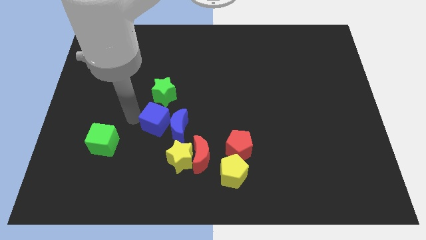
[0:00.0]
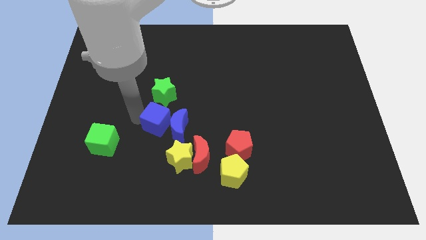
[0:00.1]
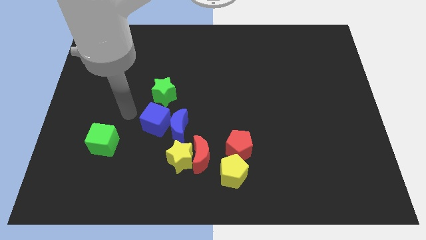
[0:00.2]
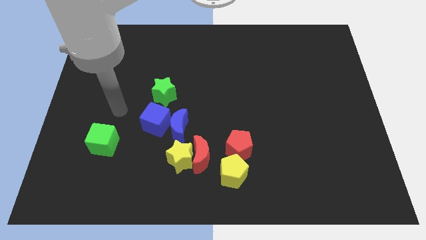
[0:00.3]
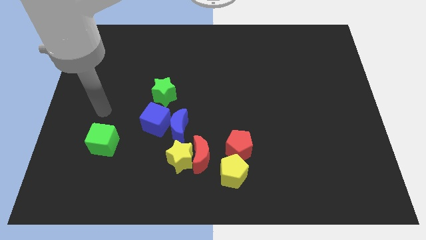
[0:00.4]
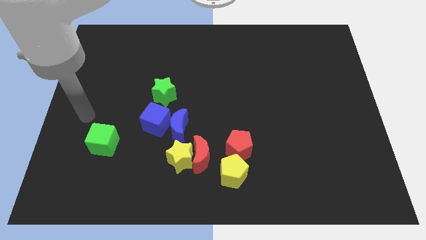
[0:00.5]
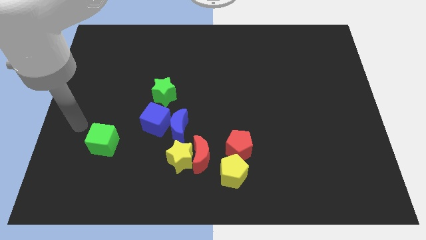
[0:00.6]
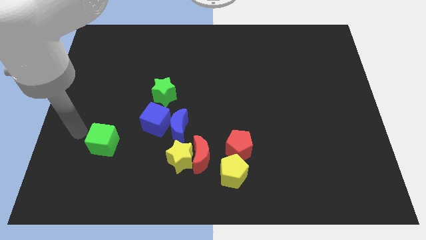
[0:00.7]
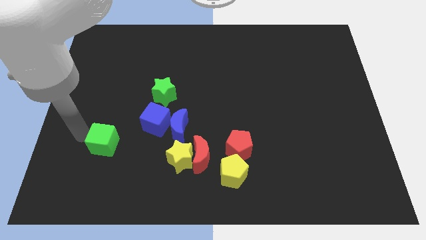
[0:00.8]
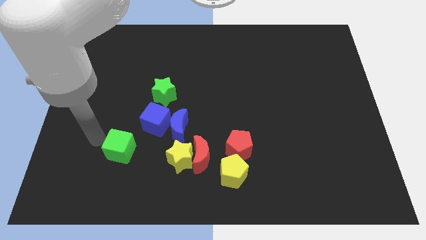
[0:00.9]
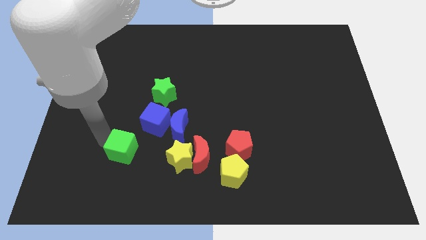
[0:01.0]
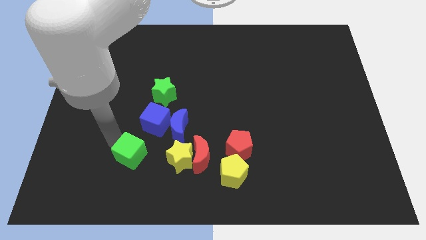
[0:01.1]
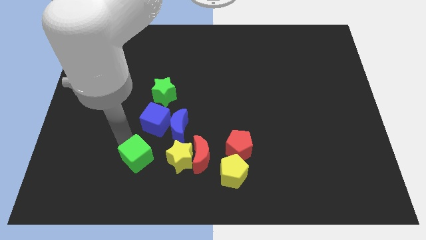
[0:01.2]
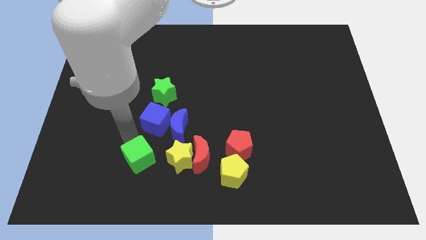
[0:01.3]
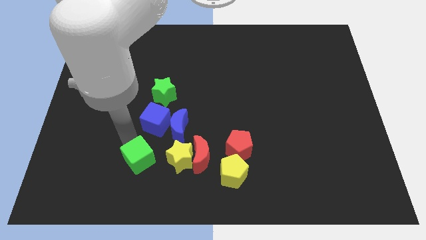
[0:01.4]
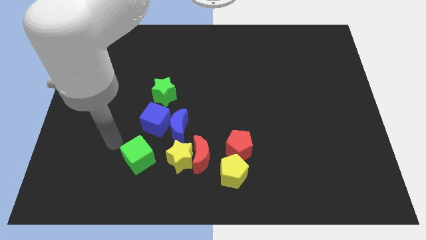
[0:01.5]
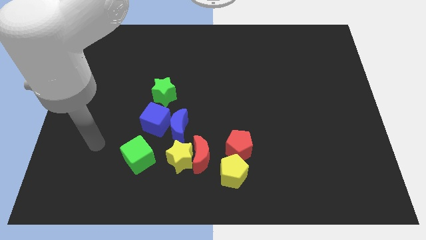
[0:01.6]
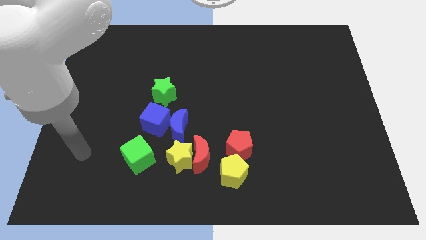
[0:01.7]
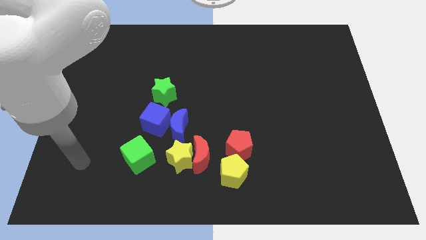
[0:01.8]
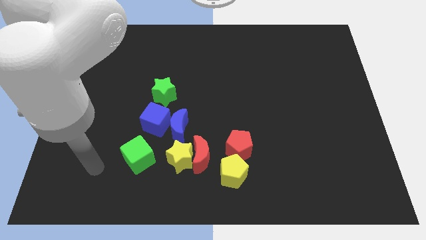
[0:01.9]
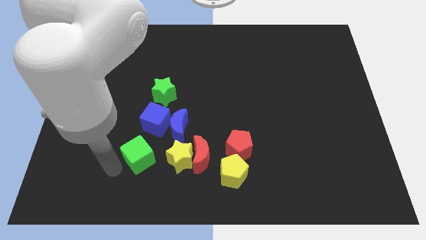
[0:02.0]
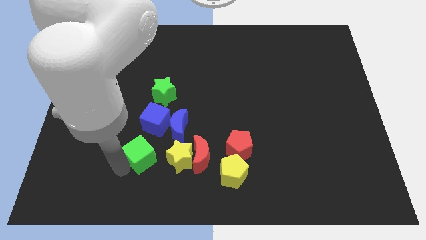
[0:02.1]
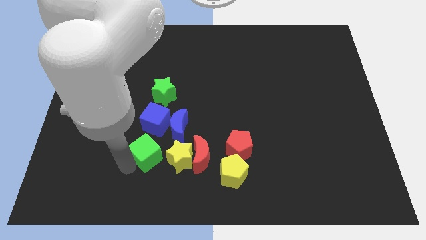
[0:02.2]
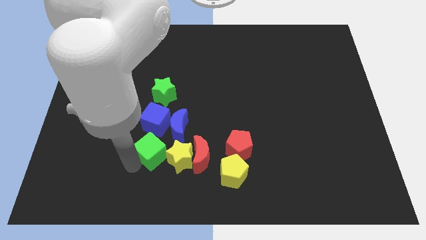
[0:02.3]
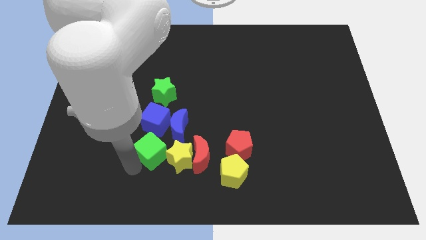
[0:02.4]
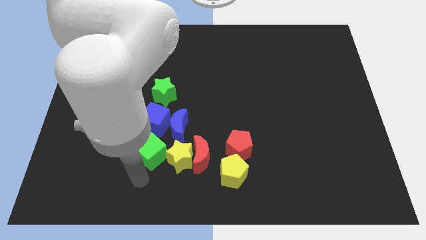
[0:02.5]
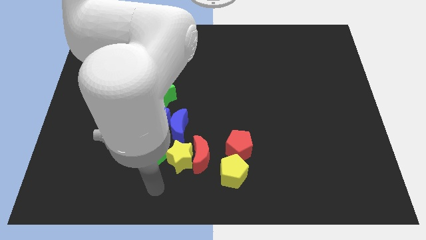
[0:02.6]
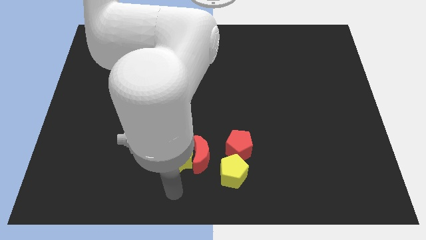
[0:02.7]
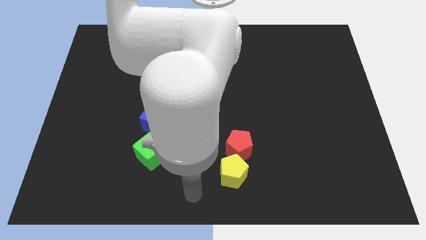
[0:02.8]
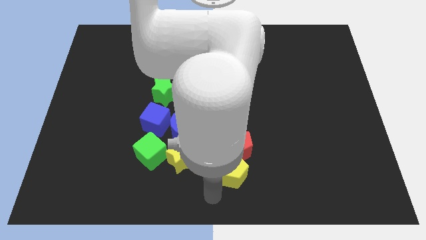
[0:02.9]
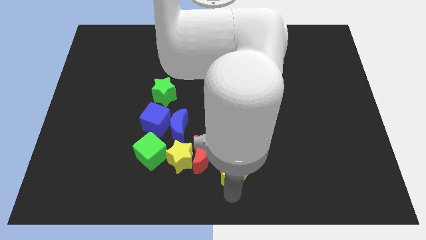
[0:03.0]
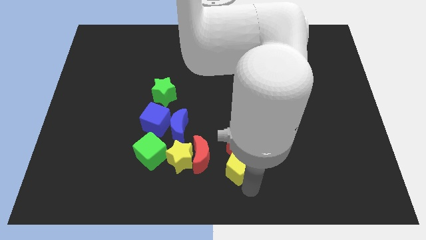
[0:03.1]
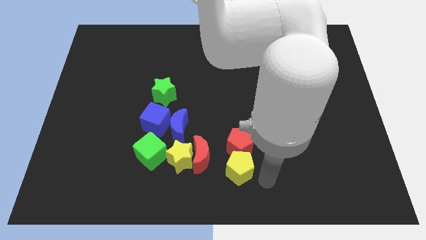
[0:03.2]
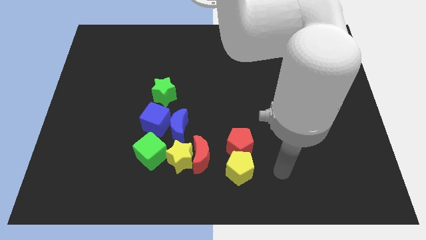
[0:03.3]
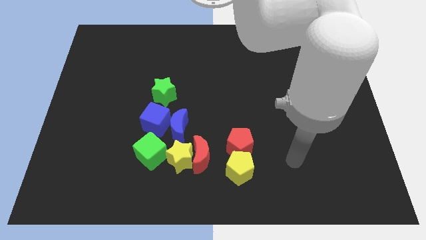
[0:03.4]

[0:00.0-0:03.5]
move the green cube close to the yellow star

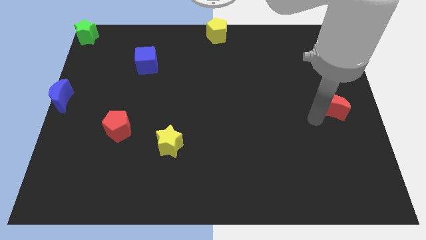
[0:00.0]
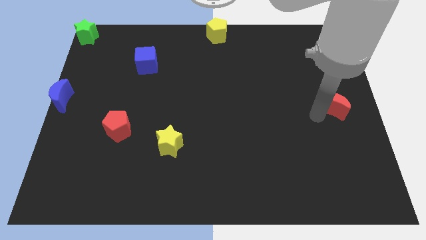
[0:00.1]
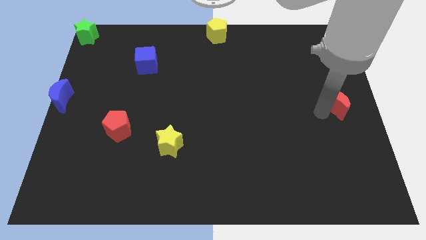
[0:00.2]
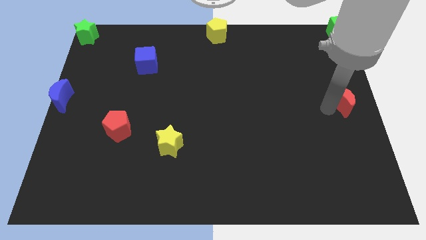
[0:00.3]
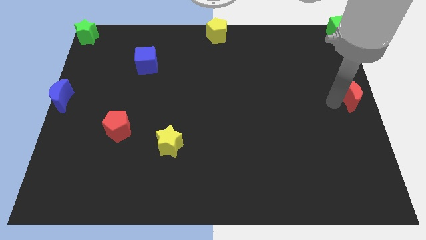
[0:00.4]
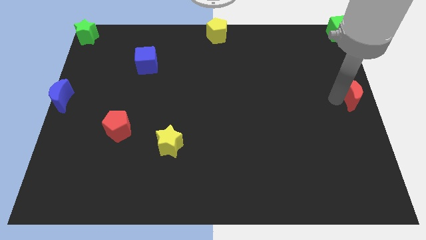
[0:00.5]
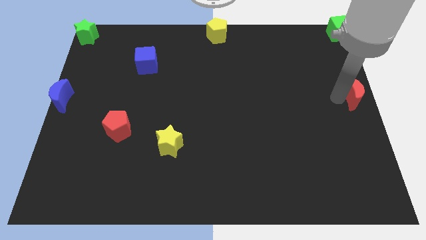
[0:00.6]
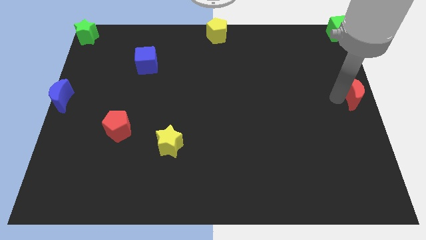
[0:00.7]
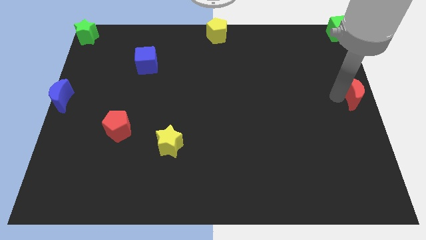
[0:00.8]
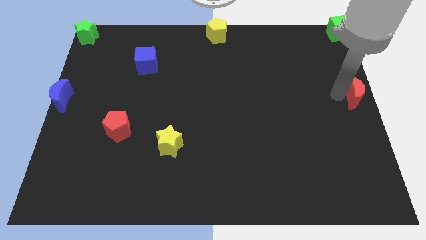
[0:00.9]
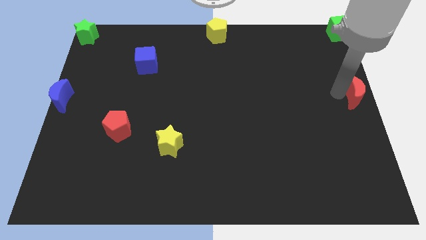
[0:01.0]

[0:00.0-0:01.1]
push the red crescent to the right center of the board

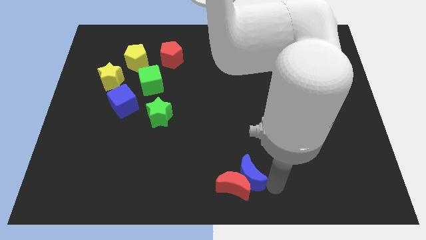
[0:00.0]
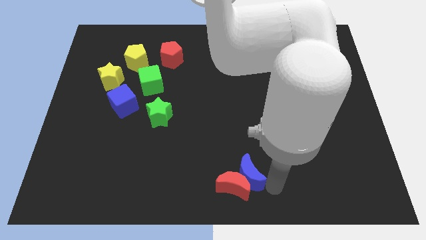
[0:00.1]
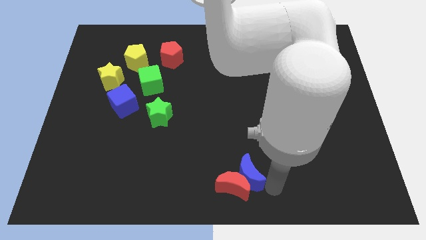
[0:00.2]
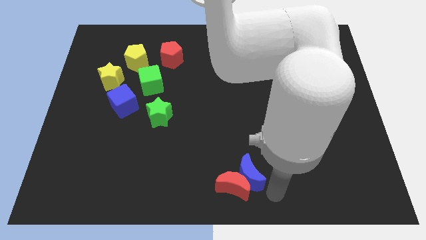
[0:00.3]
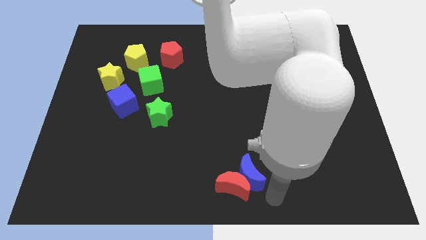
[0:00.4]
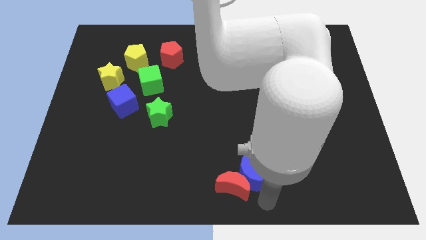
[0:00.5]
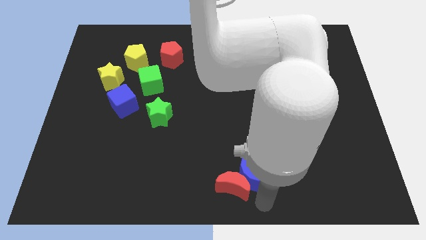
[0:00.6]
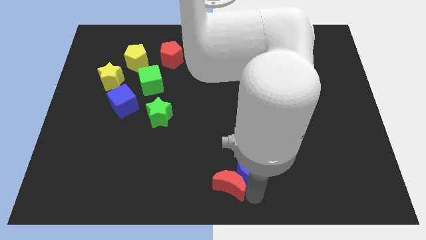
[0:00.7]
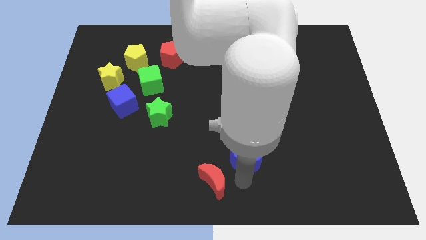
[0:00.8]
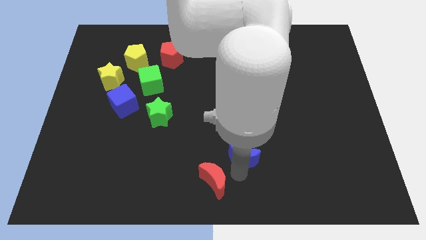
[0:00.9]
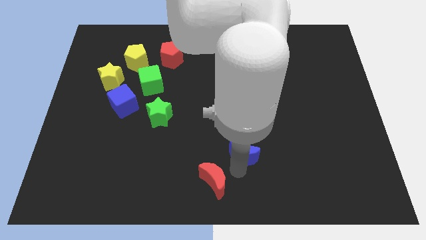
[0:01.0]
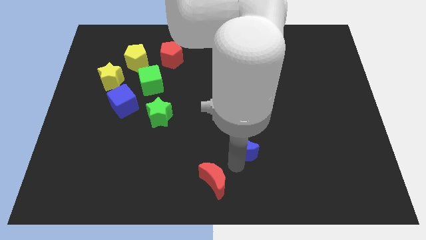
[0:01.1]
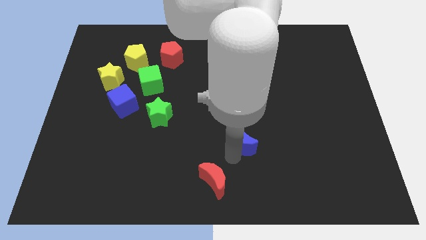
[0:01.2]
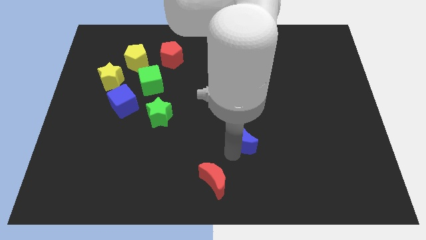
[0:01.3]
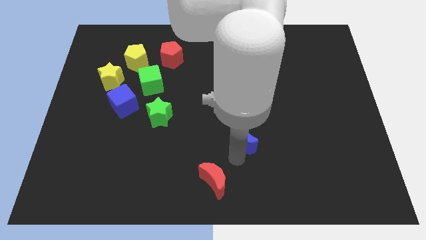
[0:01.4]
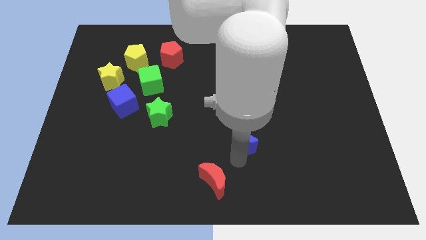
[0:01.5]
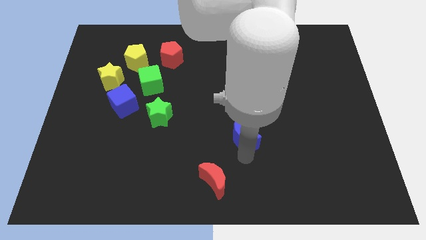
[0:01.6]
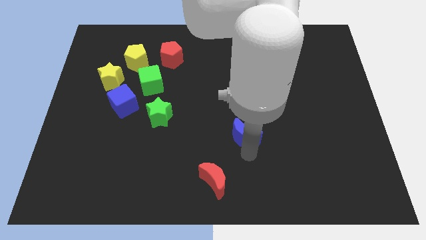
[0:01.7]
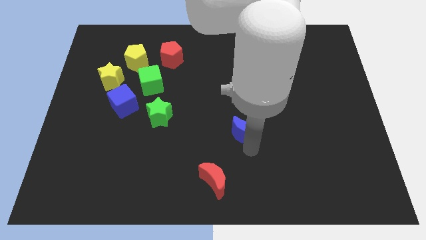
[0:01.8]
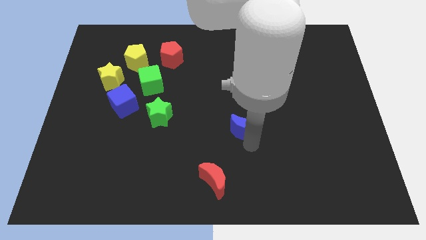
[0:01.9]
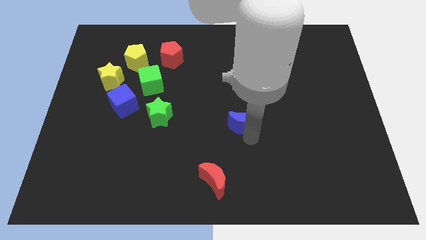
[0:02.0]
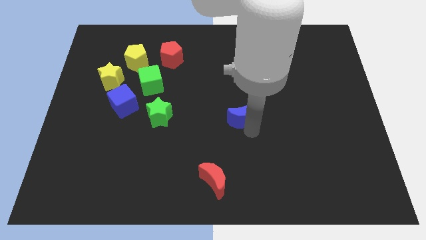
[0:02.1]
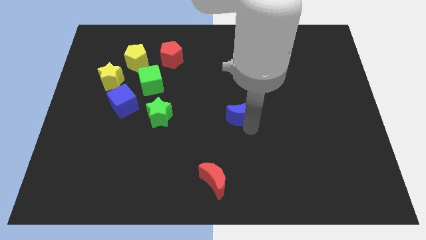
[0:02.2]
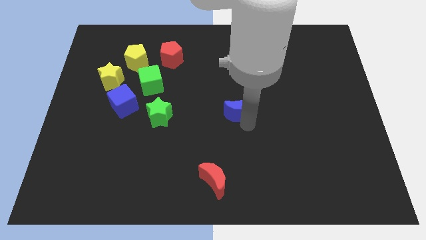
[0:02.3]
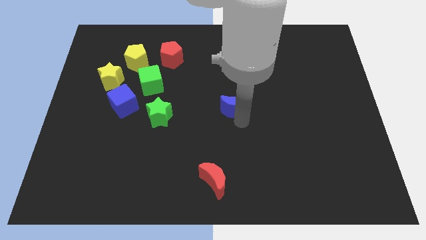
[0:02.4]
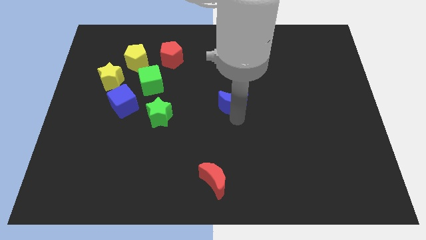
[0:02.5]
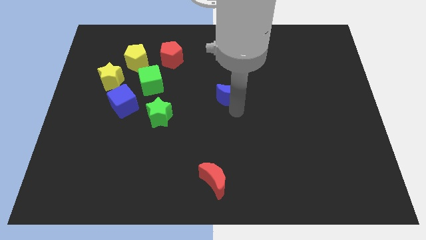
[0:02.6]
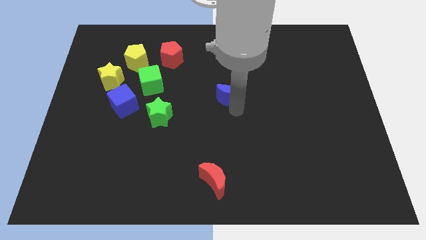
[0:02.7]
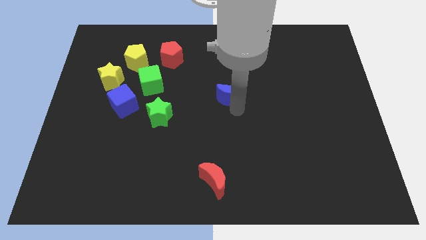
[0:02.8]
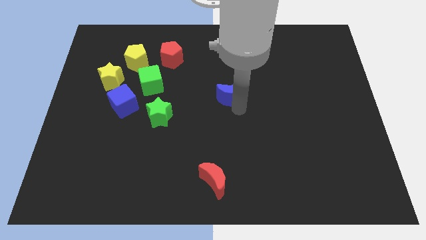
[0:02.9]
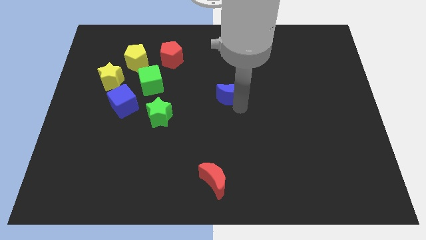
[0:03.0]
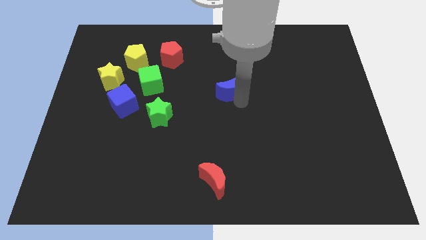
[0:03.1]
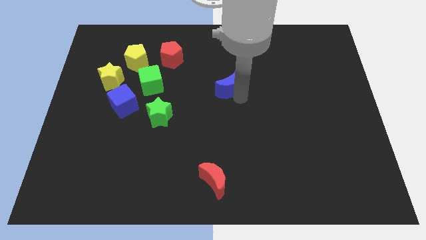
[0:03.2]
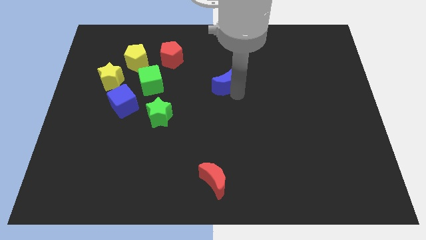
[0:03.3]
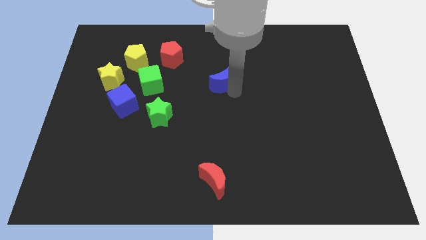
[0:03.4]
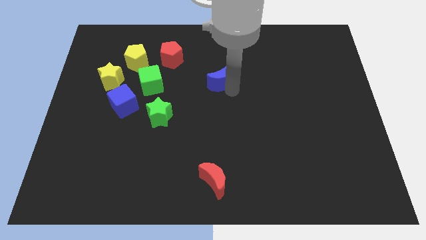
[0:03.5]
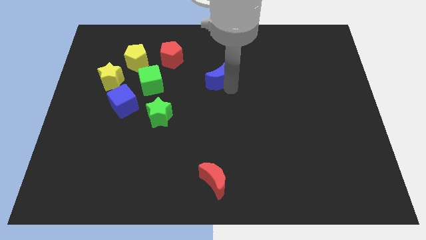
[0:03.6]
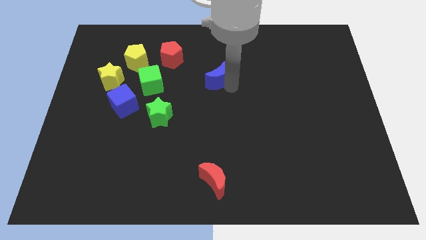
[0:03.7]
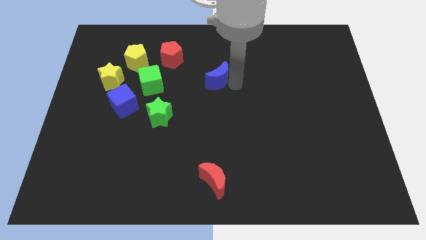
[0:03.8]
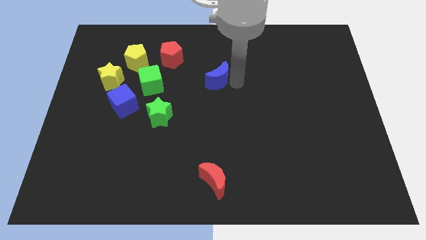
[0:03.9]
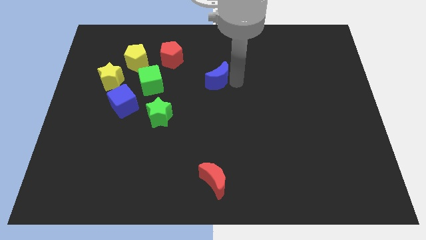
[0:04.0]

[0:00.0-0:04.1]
apart blue crescent from red crescent

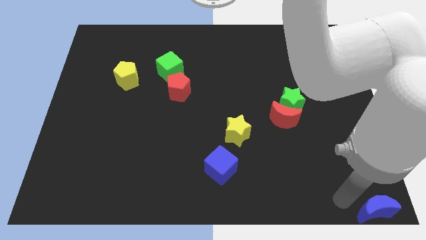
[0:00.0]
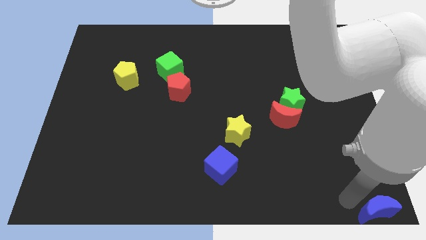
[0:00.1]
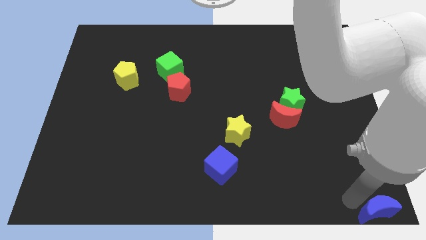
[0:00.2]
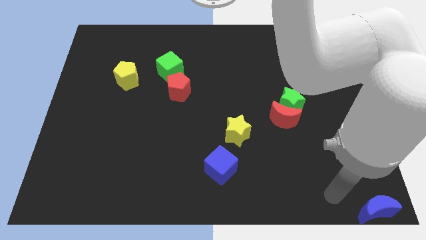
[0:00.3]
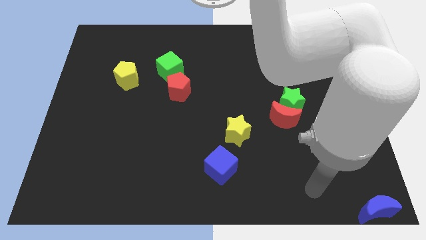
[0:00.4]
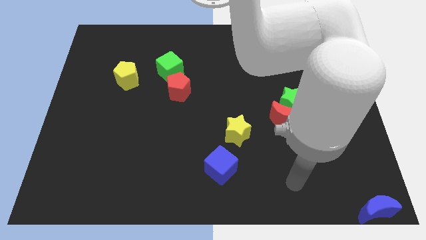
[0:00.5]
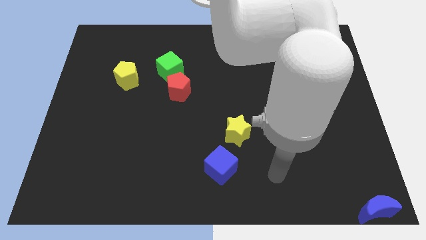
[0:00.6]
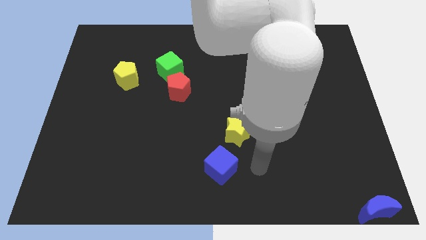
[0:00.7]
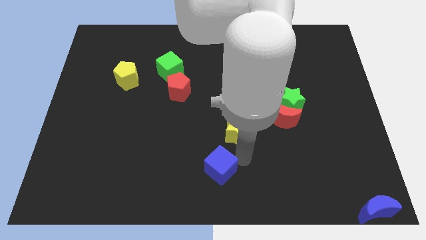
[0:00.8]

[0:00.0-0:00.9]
move arm from the blue moon
